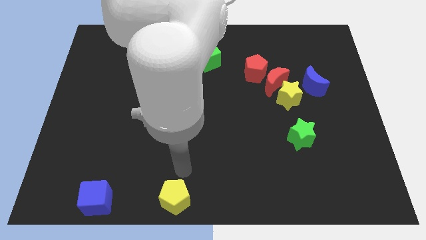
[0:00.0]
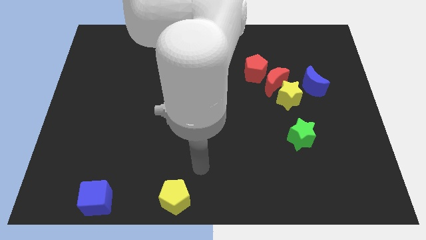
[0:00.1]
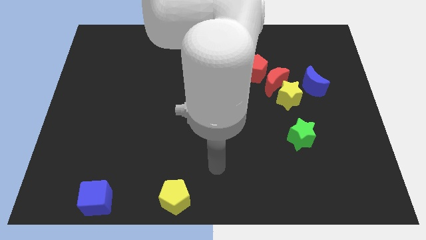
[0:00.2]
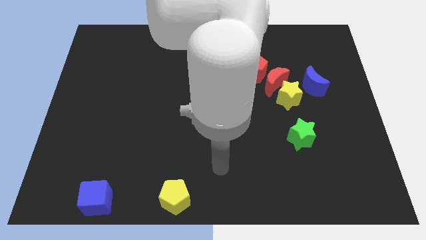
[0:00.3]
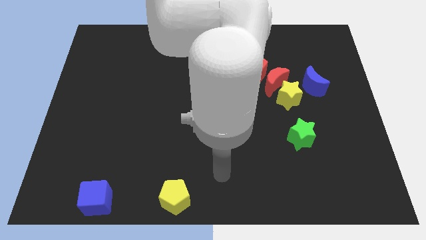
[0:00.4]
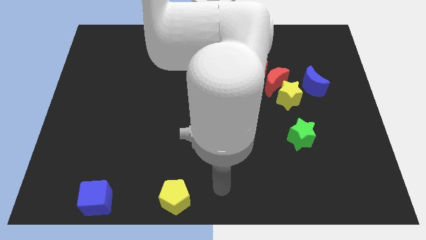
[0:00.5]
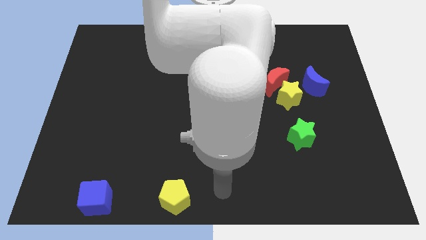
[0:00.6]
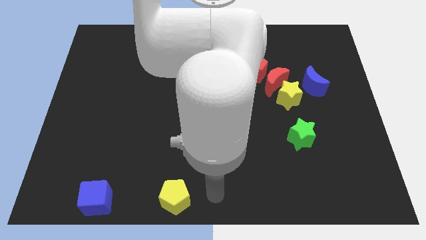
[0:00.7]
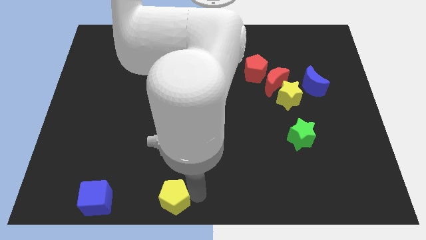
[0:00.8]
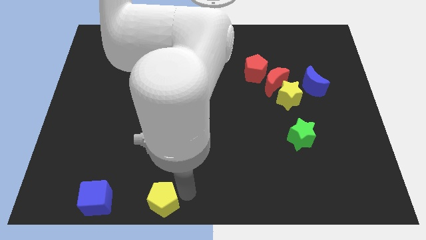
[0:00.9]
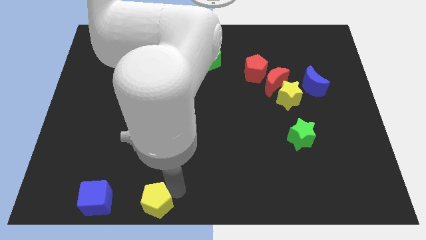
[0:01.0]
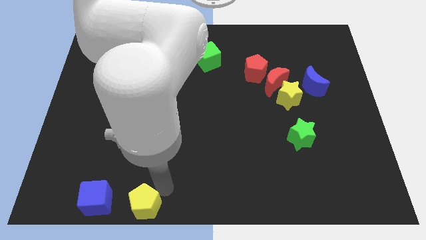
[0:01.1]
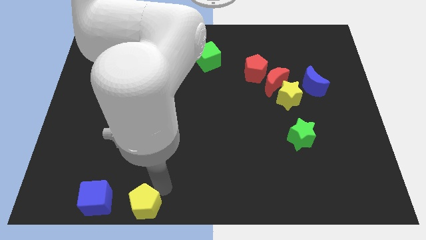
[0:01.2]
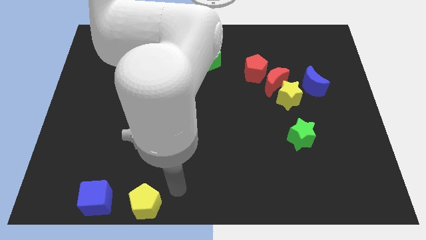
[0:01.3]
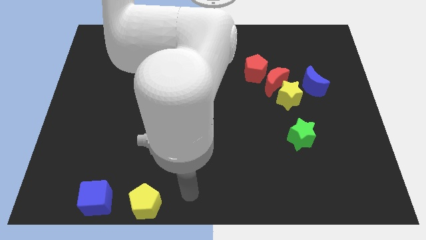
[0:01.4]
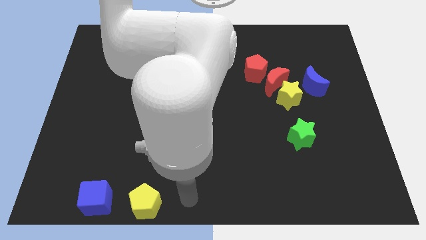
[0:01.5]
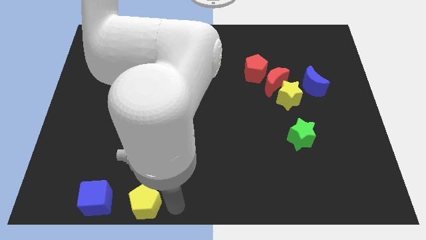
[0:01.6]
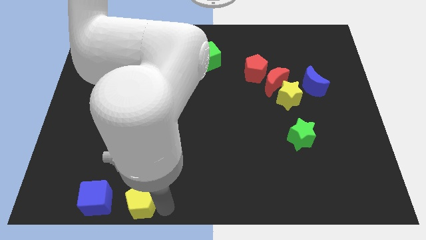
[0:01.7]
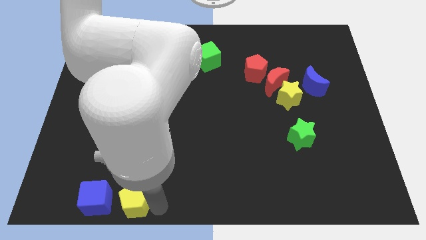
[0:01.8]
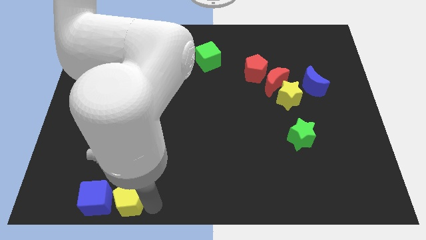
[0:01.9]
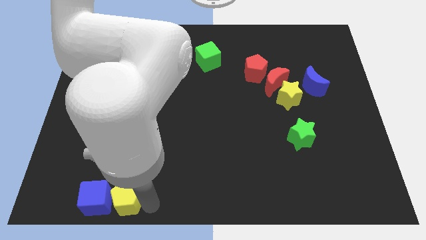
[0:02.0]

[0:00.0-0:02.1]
push the yellow pentagon close to the right of the blue cube

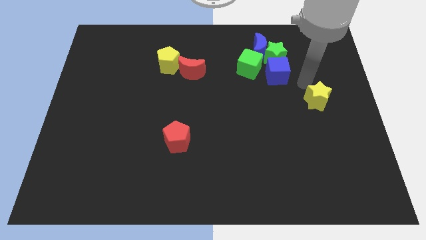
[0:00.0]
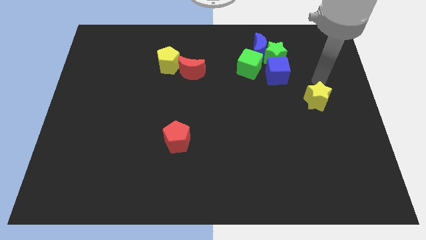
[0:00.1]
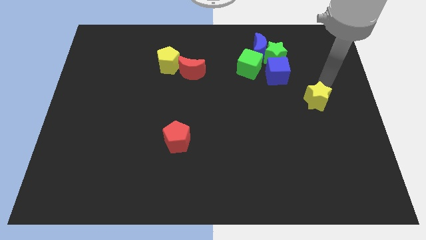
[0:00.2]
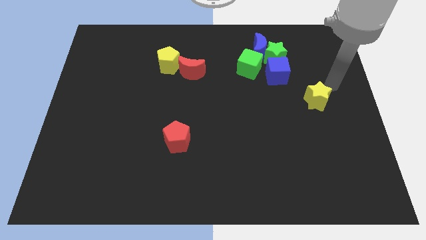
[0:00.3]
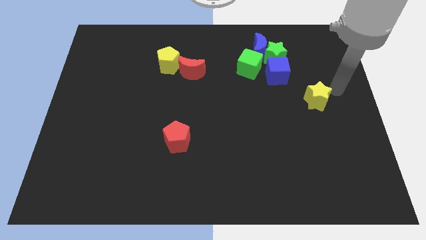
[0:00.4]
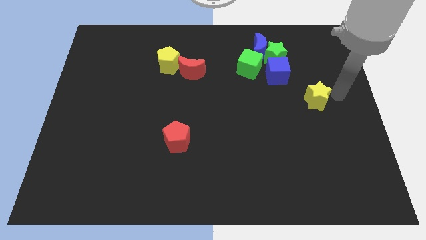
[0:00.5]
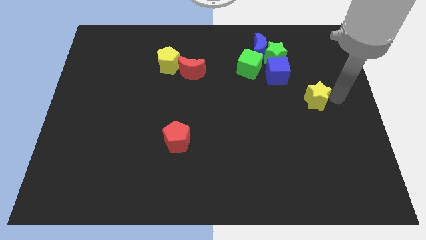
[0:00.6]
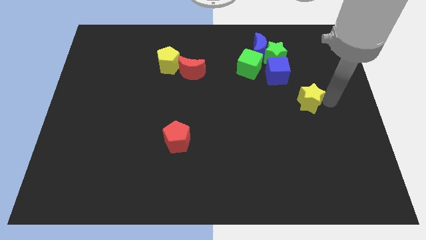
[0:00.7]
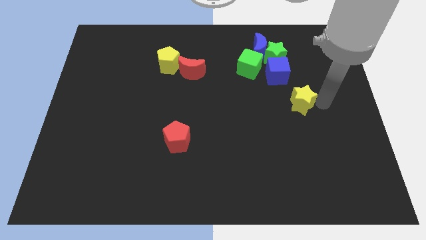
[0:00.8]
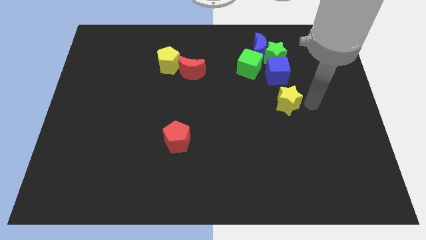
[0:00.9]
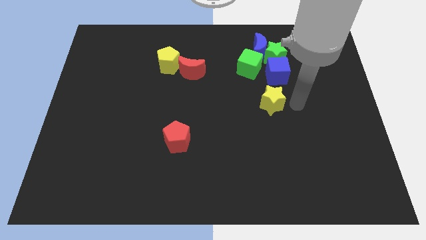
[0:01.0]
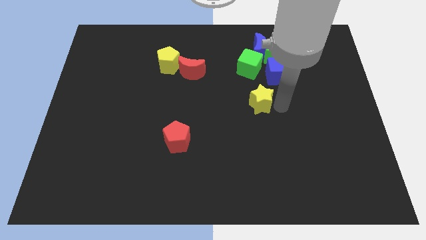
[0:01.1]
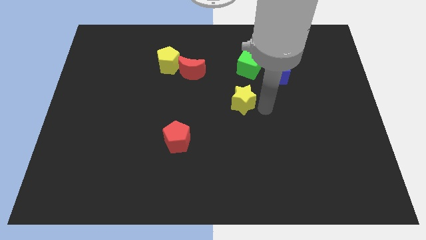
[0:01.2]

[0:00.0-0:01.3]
place the yellow star below the green cube

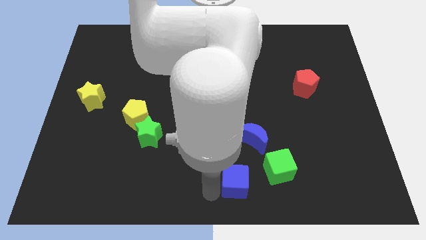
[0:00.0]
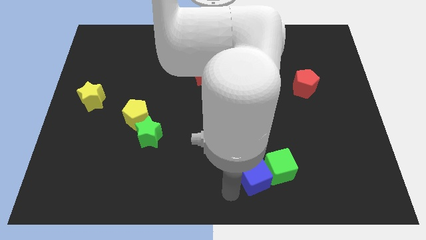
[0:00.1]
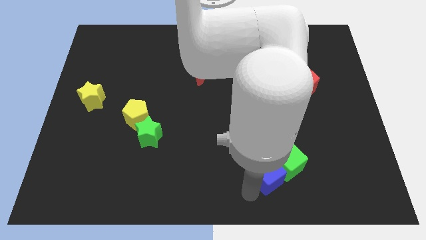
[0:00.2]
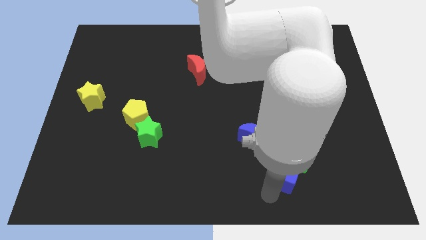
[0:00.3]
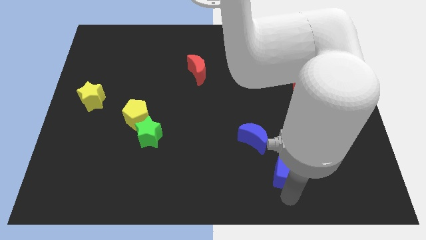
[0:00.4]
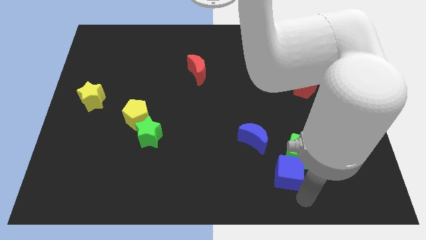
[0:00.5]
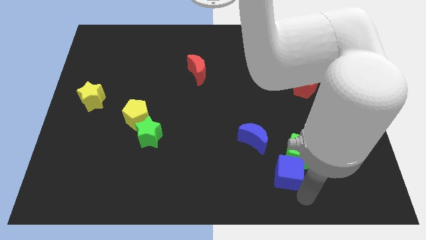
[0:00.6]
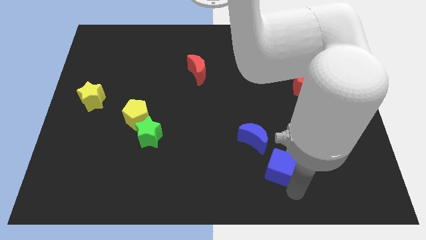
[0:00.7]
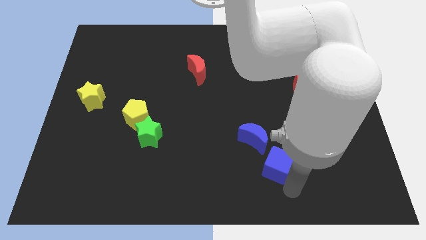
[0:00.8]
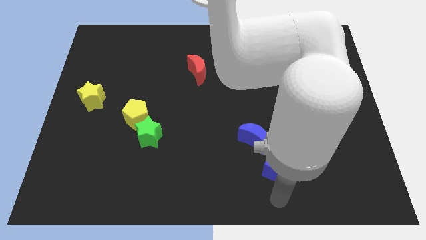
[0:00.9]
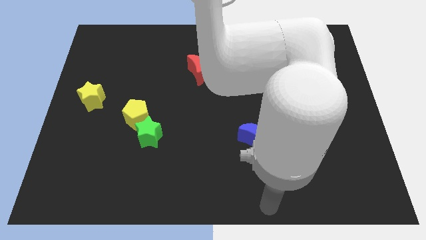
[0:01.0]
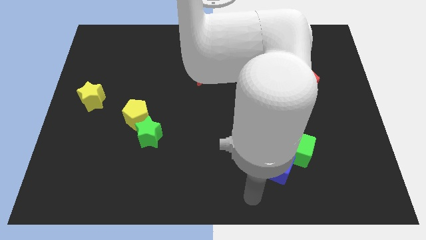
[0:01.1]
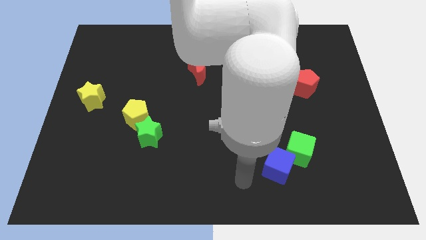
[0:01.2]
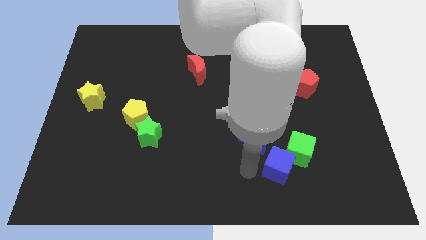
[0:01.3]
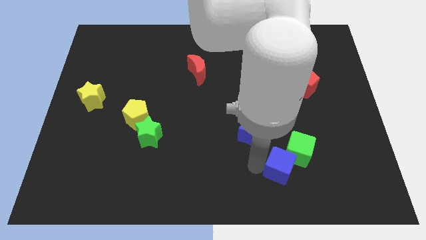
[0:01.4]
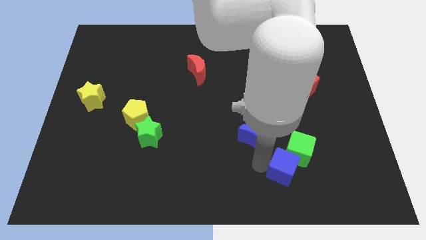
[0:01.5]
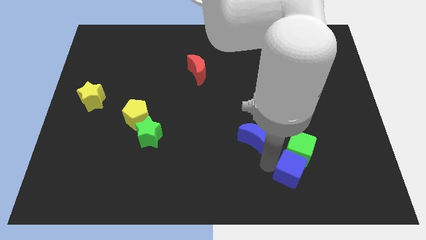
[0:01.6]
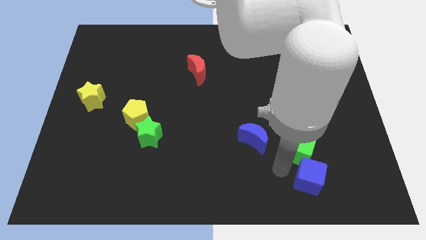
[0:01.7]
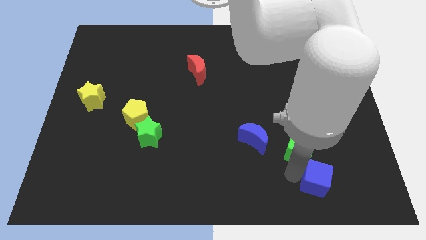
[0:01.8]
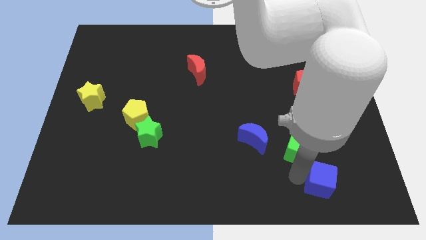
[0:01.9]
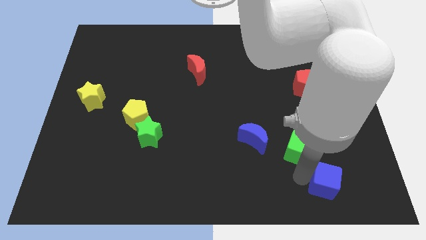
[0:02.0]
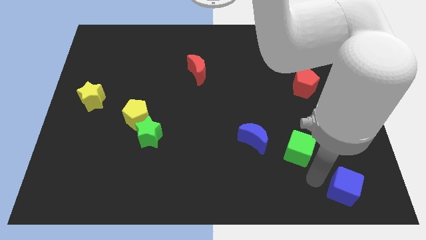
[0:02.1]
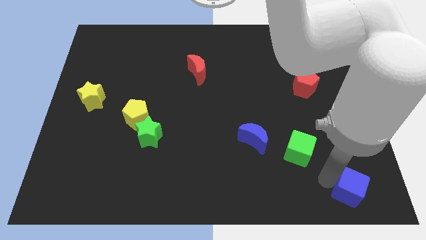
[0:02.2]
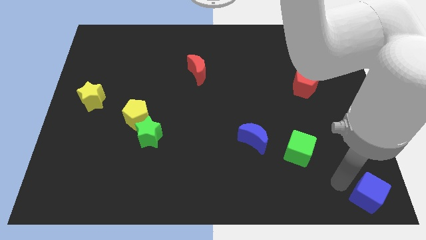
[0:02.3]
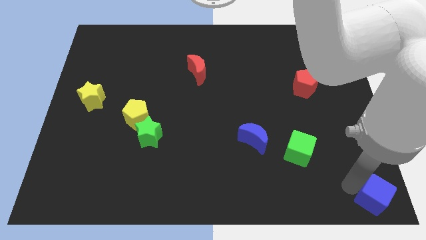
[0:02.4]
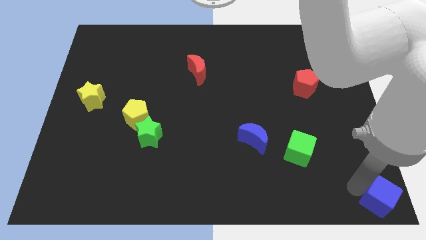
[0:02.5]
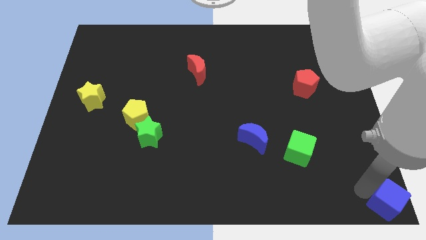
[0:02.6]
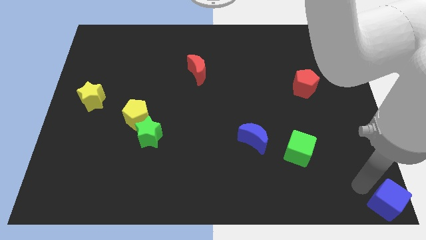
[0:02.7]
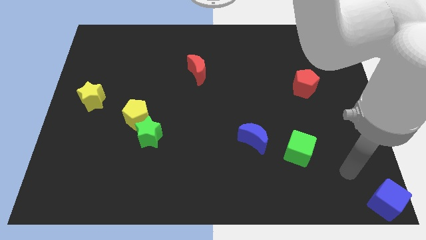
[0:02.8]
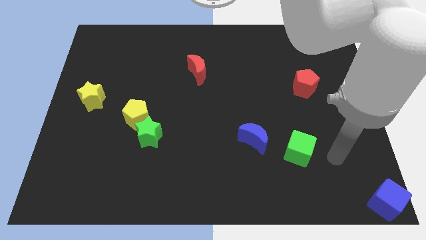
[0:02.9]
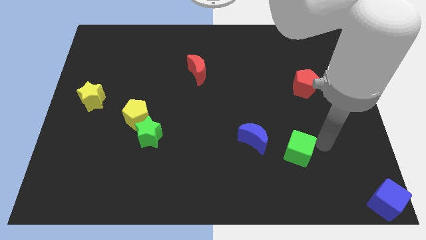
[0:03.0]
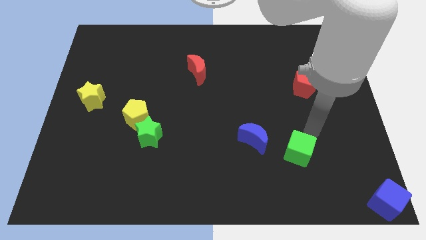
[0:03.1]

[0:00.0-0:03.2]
place blue cube at bottom right corner

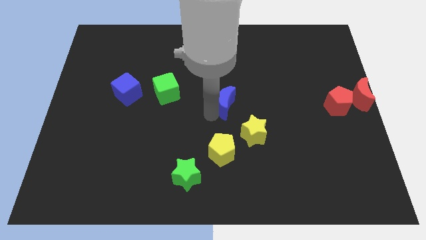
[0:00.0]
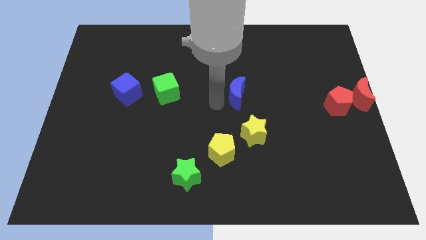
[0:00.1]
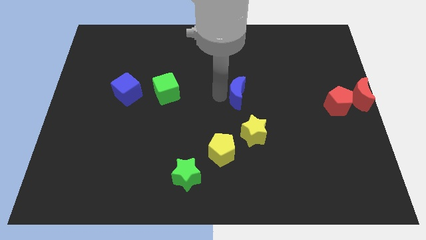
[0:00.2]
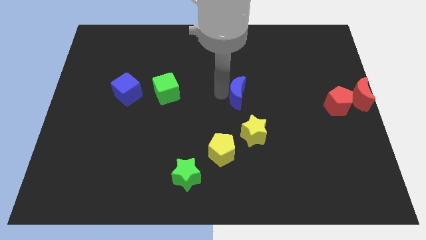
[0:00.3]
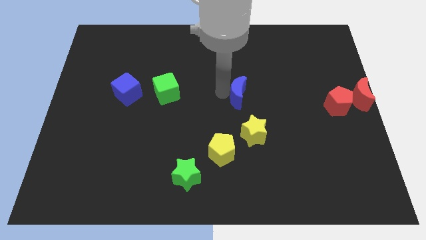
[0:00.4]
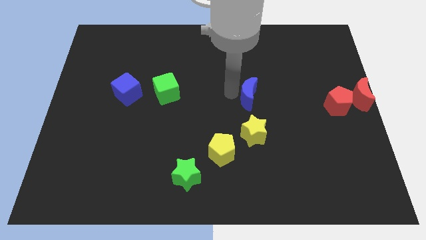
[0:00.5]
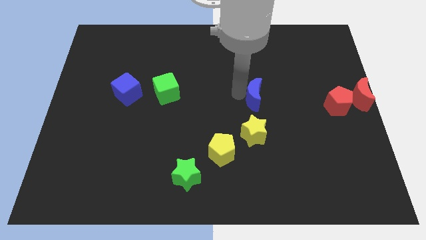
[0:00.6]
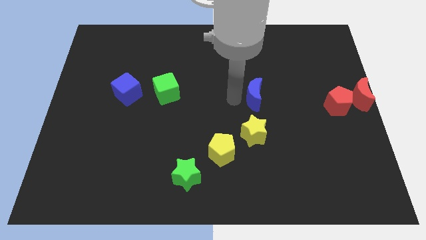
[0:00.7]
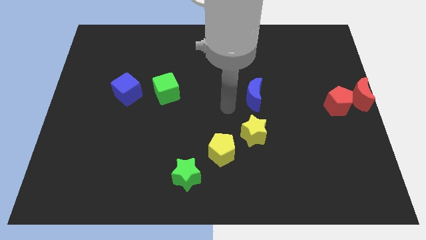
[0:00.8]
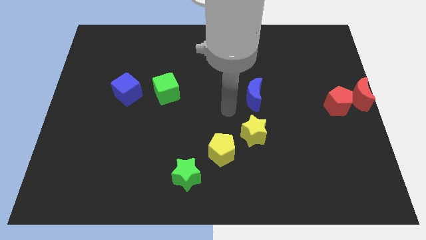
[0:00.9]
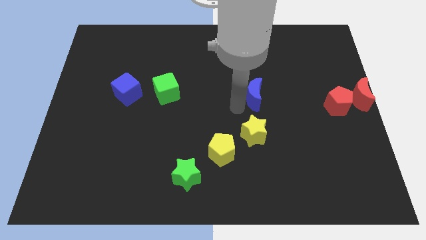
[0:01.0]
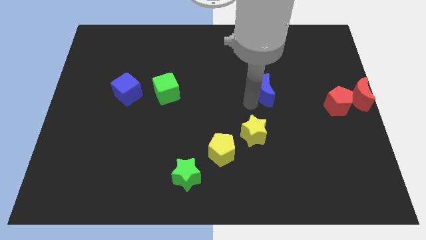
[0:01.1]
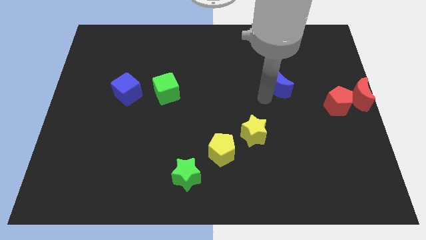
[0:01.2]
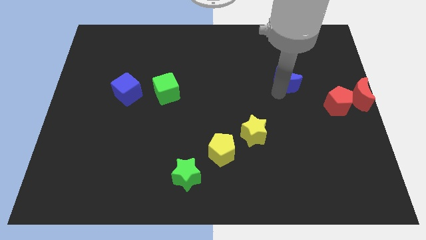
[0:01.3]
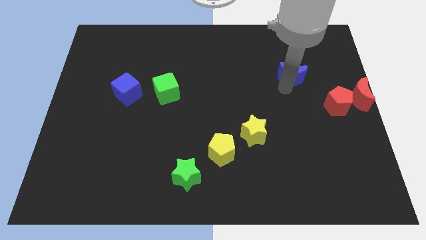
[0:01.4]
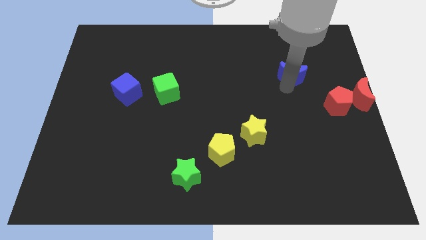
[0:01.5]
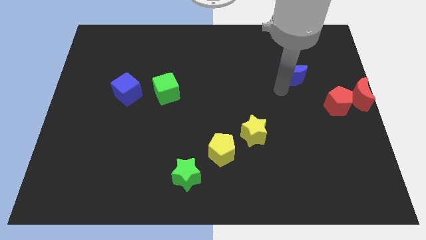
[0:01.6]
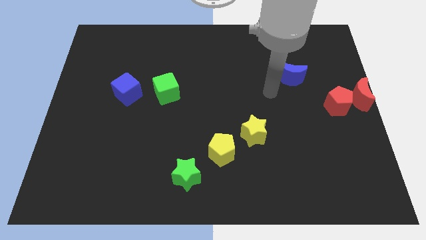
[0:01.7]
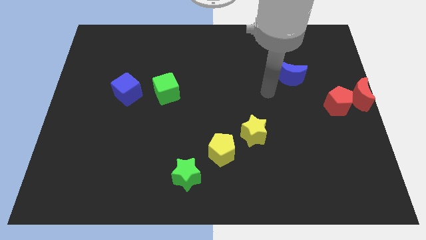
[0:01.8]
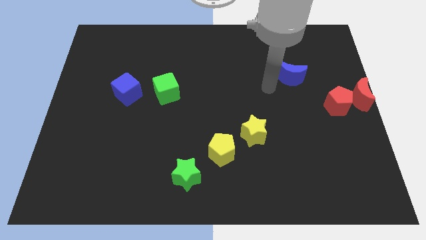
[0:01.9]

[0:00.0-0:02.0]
push the blue crescent towards the top side of the board

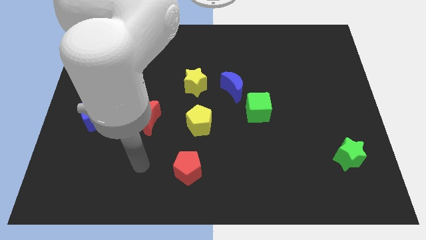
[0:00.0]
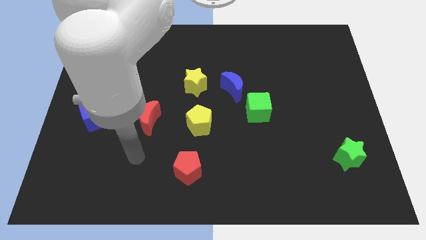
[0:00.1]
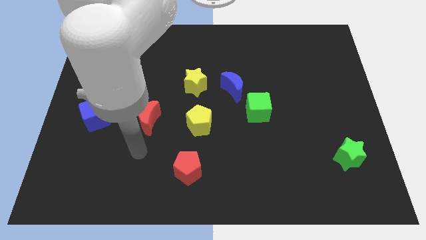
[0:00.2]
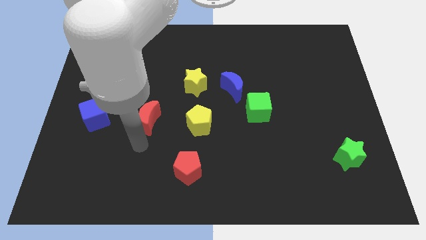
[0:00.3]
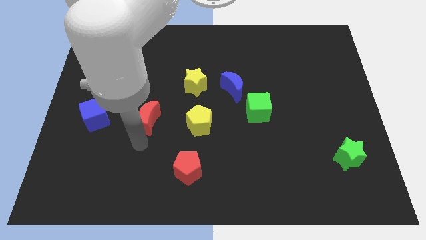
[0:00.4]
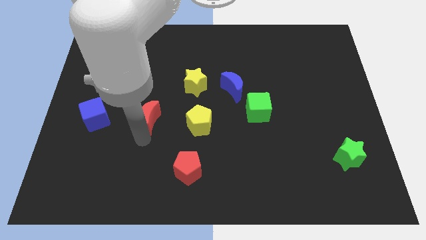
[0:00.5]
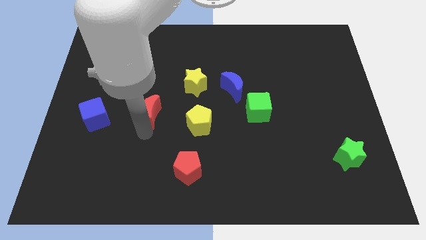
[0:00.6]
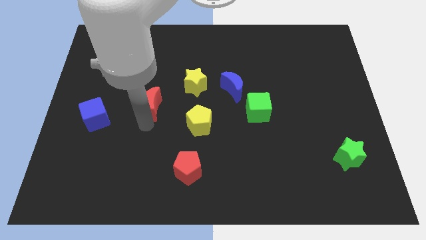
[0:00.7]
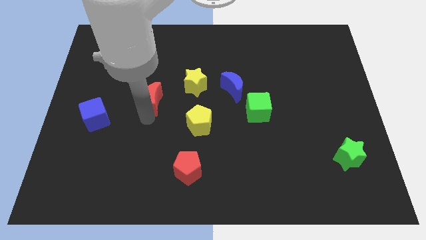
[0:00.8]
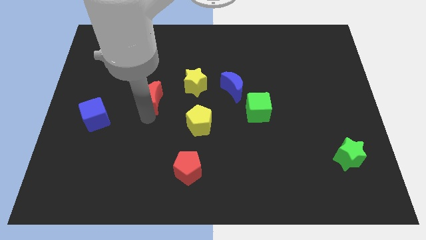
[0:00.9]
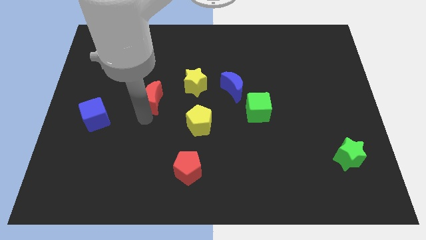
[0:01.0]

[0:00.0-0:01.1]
push the red moon slightly upward
